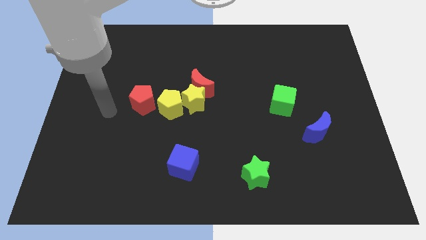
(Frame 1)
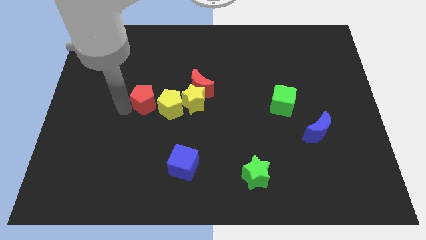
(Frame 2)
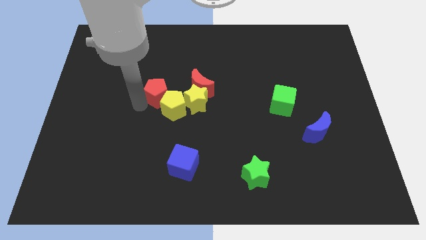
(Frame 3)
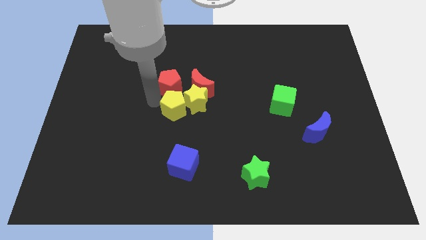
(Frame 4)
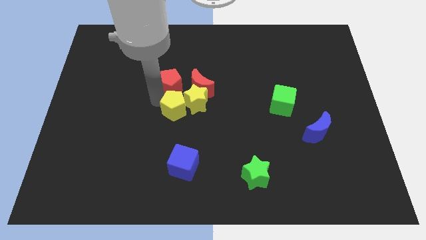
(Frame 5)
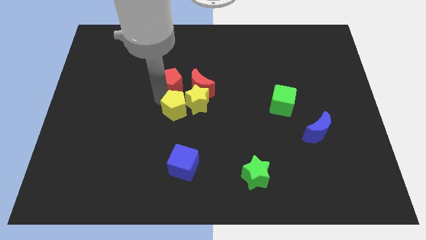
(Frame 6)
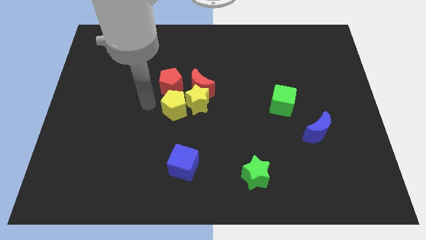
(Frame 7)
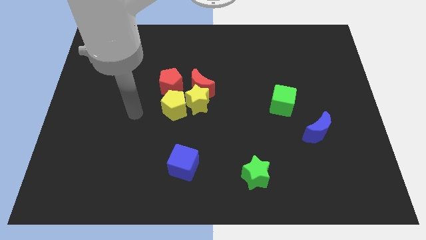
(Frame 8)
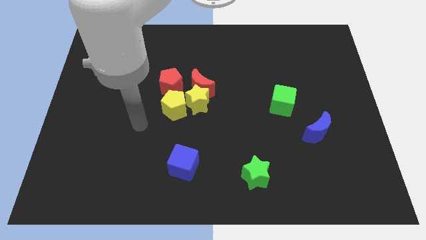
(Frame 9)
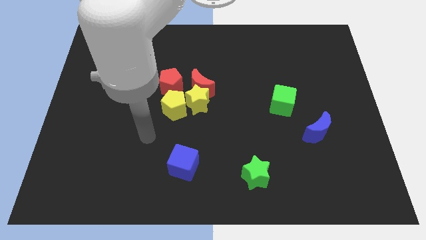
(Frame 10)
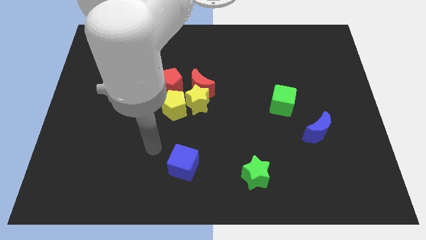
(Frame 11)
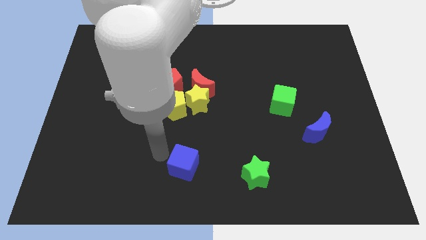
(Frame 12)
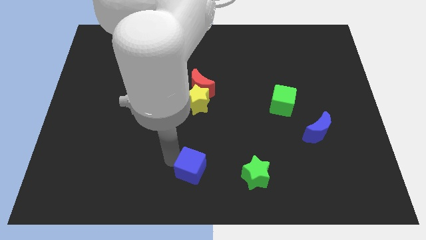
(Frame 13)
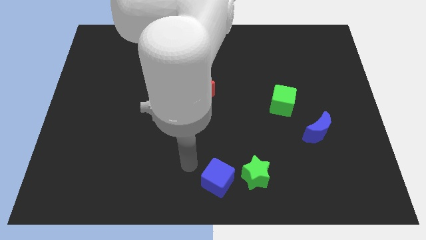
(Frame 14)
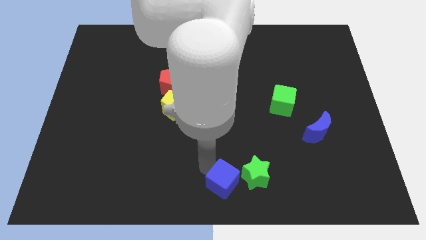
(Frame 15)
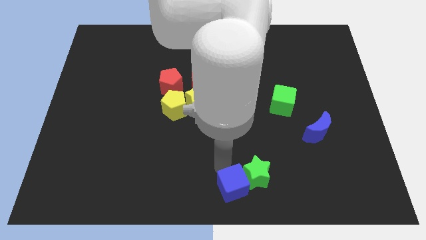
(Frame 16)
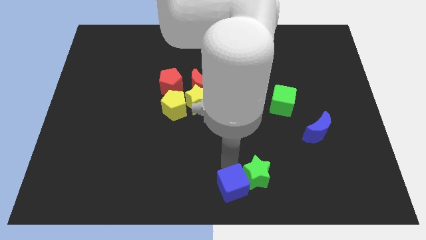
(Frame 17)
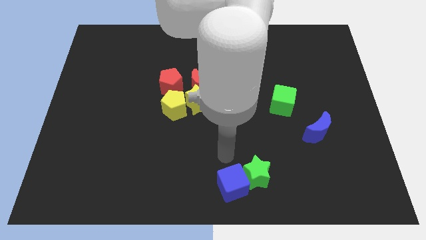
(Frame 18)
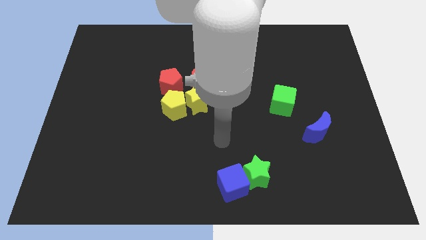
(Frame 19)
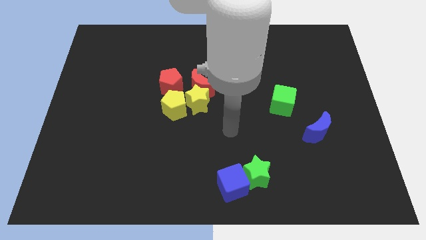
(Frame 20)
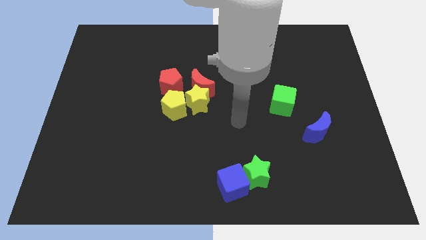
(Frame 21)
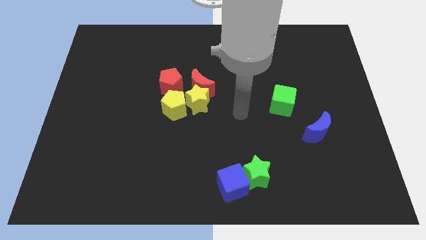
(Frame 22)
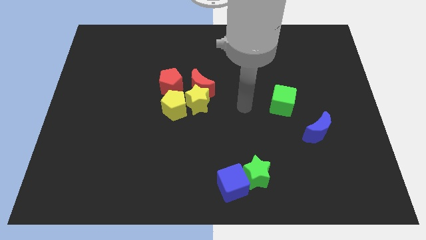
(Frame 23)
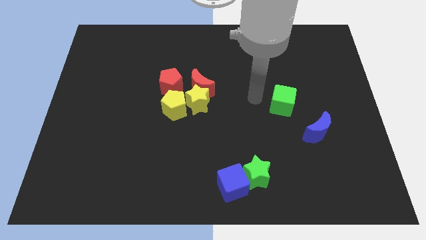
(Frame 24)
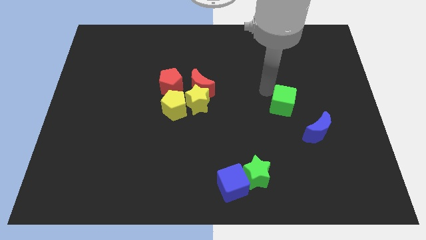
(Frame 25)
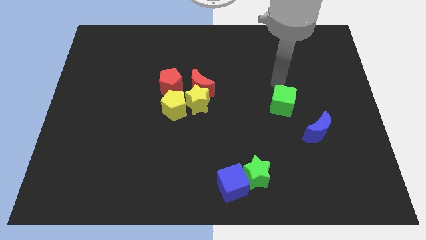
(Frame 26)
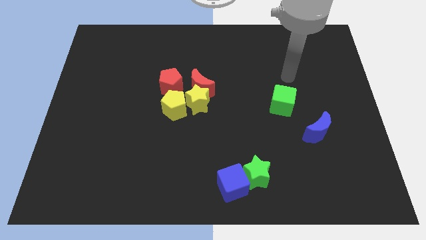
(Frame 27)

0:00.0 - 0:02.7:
place the blue cube left to the green star

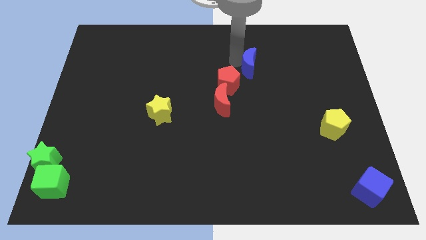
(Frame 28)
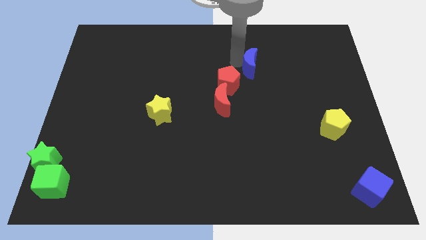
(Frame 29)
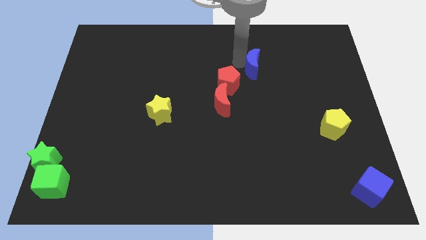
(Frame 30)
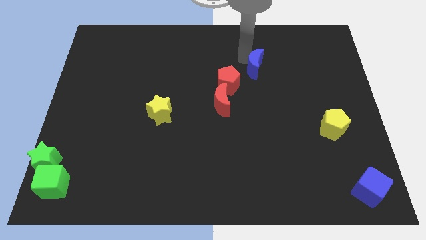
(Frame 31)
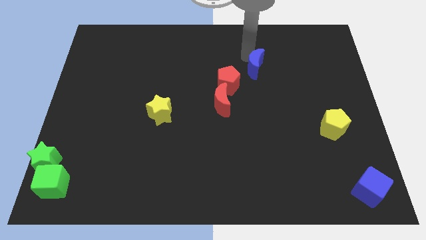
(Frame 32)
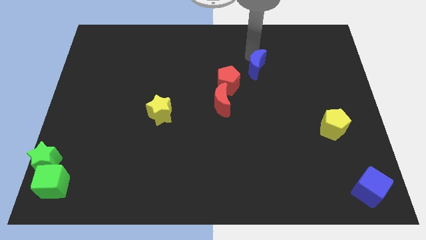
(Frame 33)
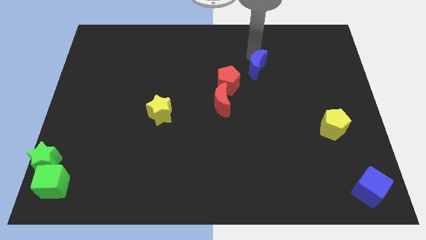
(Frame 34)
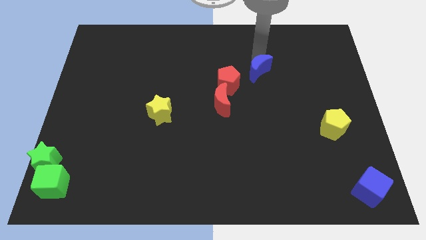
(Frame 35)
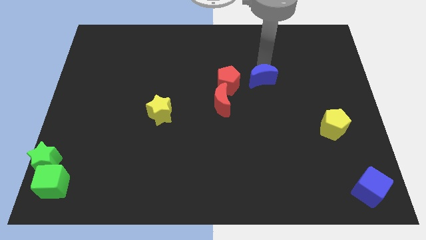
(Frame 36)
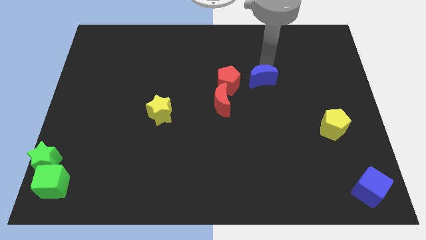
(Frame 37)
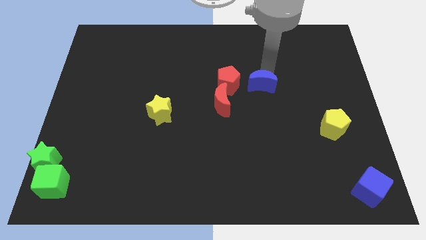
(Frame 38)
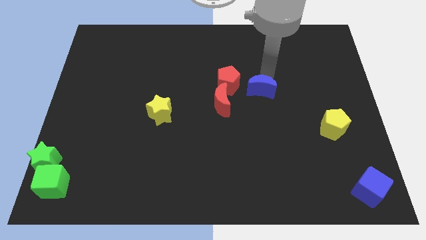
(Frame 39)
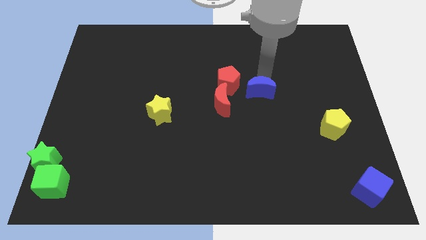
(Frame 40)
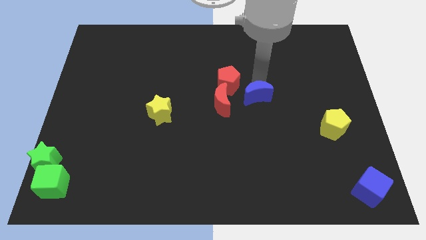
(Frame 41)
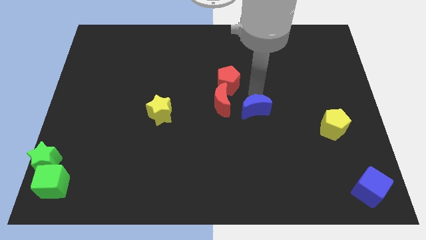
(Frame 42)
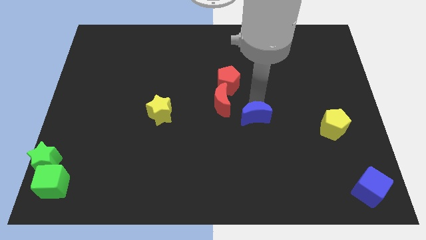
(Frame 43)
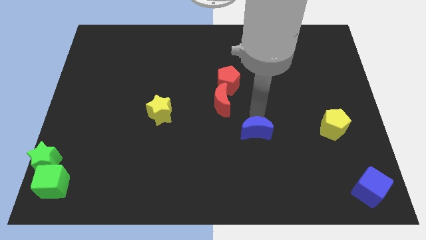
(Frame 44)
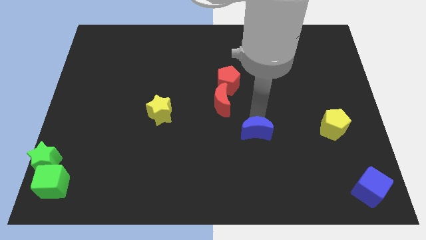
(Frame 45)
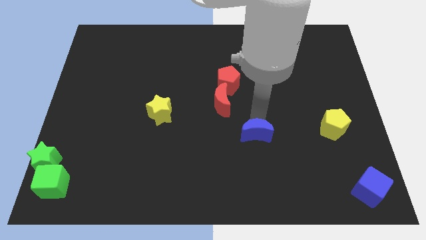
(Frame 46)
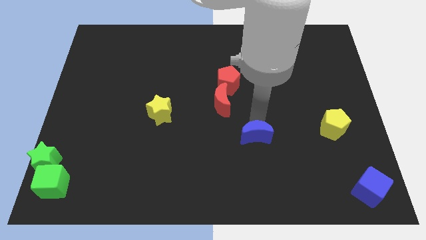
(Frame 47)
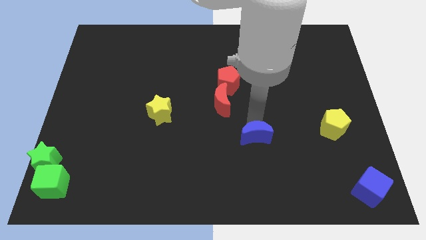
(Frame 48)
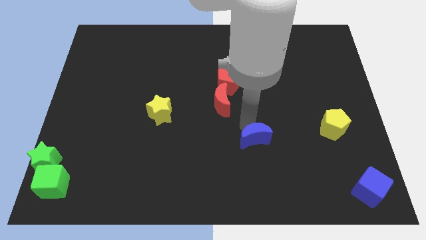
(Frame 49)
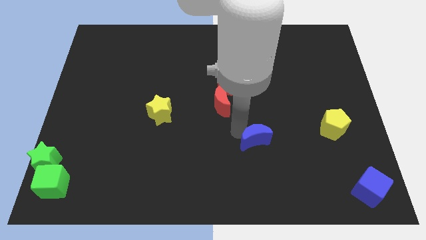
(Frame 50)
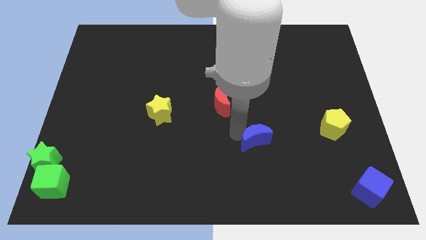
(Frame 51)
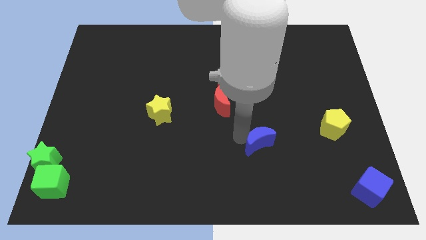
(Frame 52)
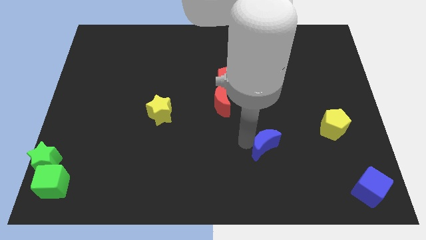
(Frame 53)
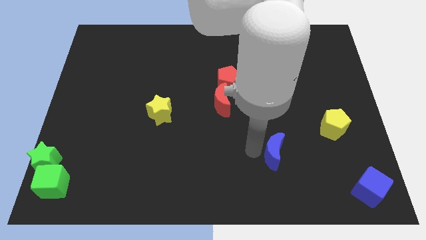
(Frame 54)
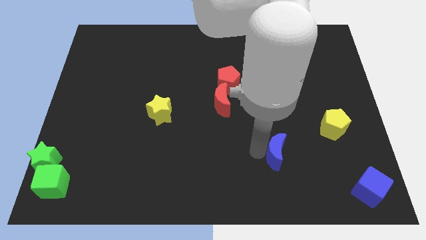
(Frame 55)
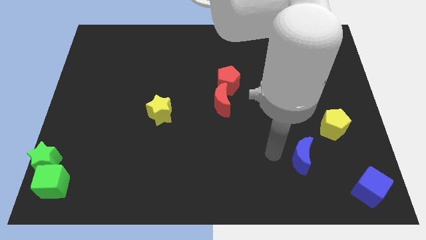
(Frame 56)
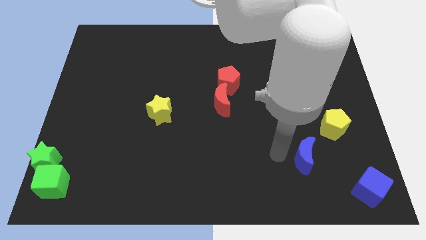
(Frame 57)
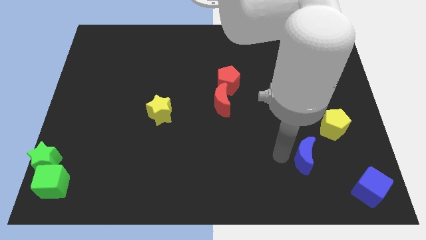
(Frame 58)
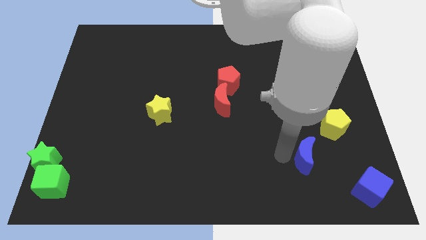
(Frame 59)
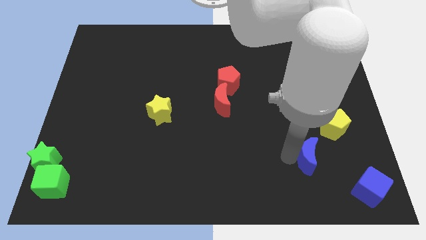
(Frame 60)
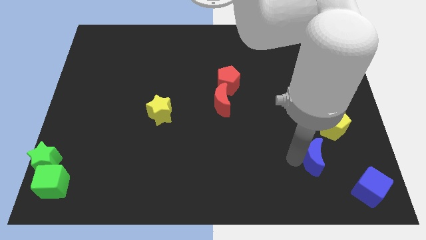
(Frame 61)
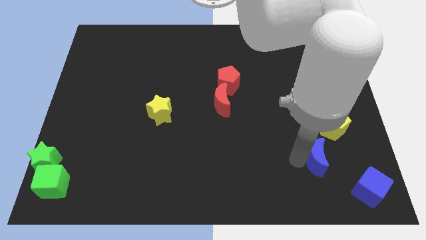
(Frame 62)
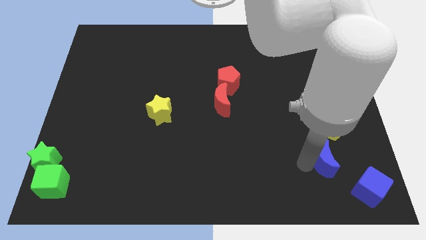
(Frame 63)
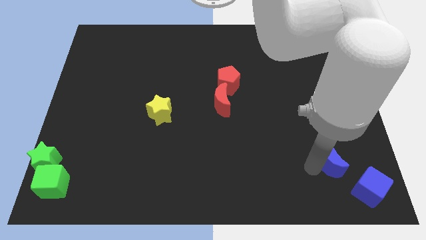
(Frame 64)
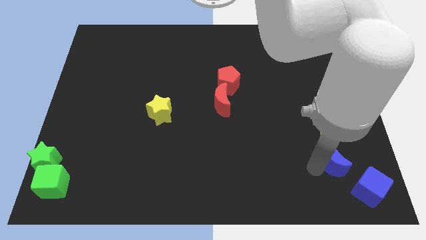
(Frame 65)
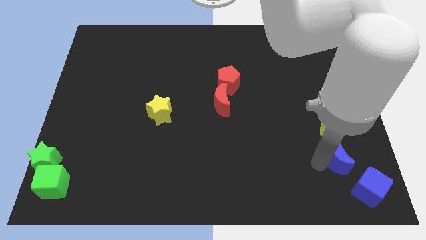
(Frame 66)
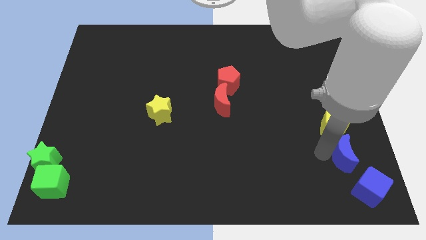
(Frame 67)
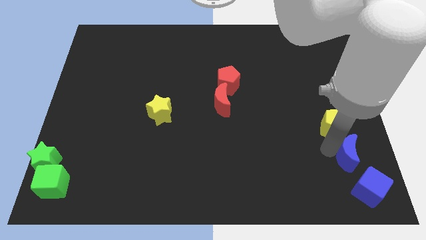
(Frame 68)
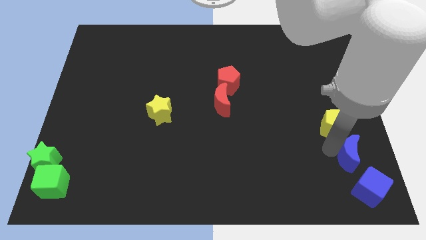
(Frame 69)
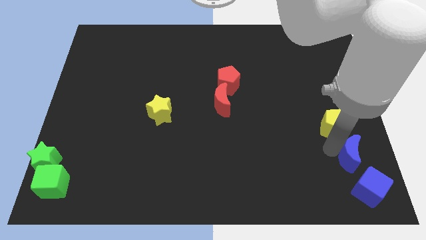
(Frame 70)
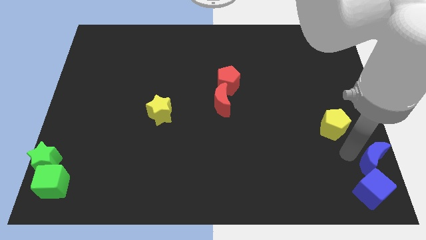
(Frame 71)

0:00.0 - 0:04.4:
slide the blue moon between yellow pentagon and blue cube

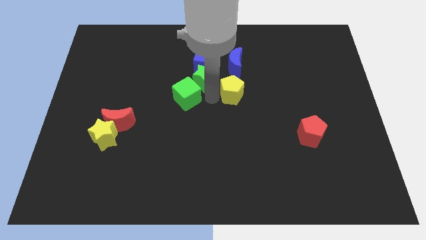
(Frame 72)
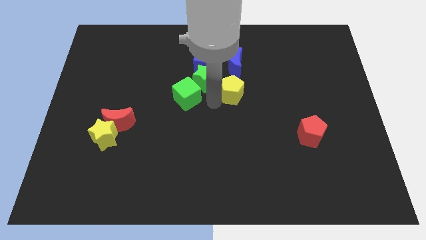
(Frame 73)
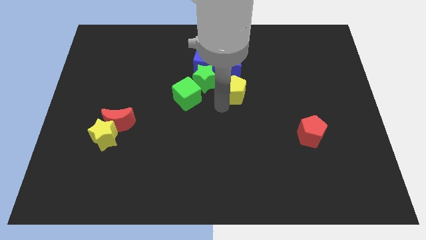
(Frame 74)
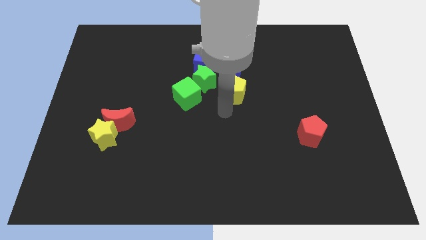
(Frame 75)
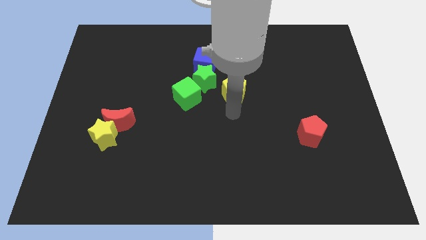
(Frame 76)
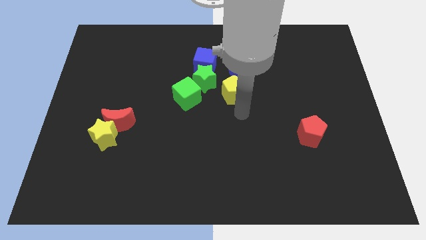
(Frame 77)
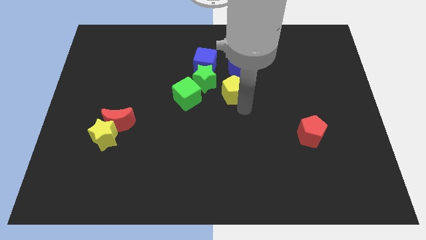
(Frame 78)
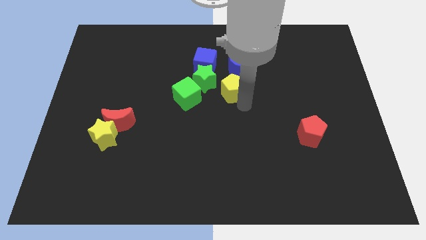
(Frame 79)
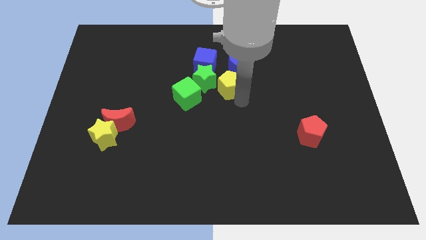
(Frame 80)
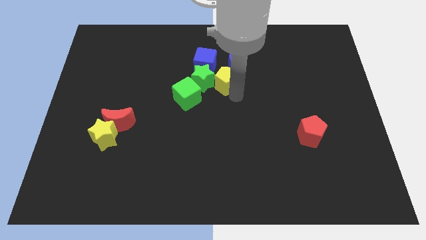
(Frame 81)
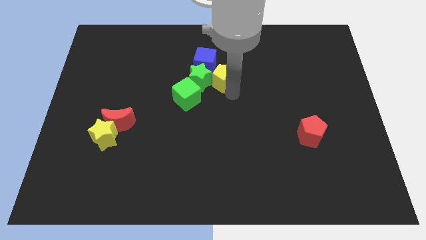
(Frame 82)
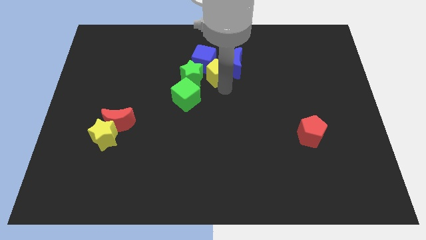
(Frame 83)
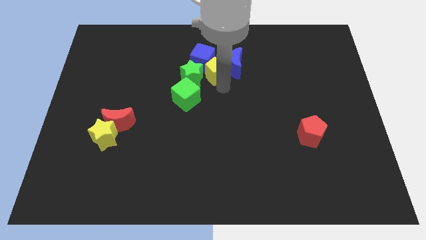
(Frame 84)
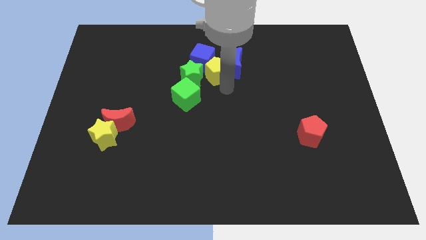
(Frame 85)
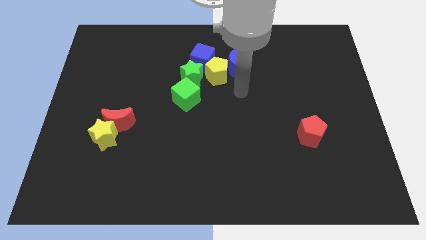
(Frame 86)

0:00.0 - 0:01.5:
push the yellow pentagon into blue cube

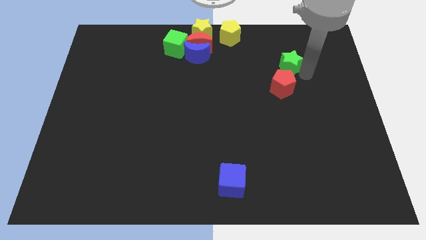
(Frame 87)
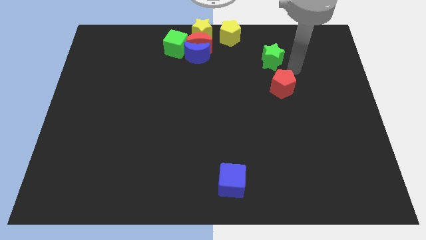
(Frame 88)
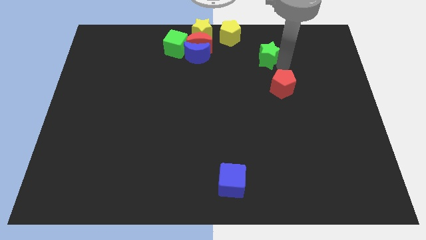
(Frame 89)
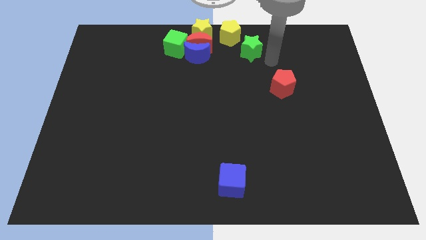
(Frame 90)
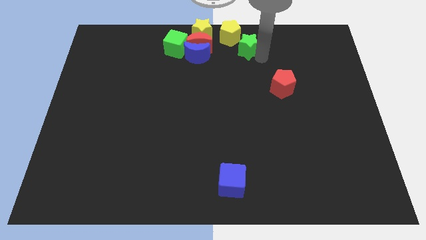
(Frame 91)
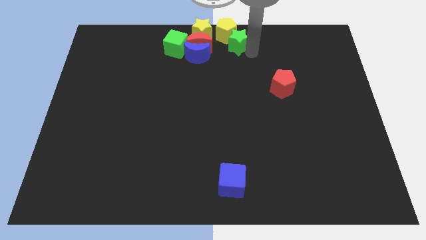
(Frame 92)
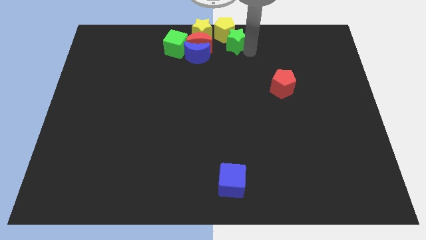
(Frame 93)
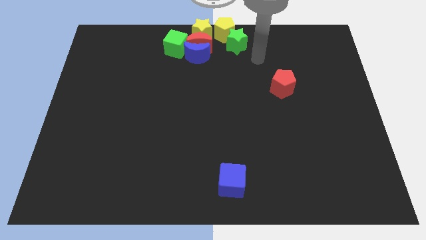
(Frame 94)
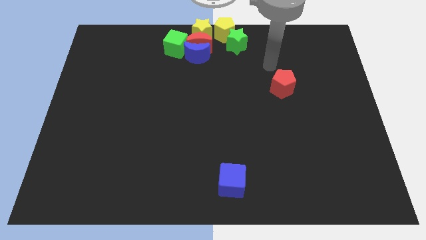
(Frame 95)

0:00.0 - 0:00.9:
push the green star into the yellow pentagon
